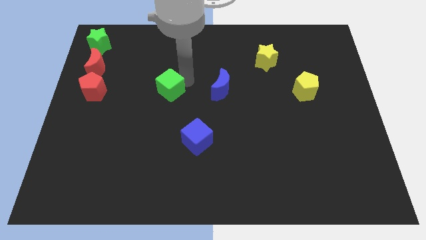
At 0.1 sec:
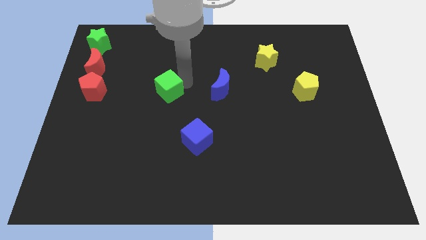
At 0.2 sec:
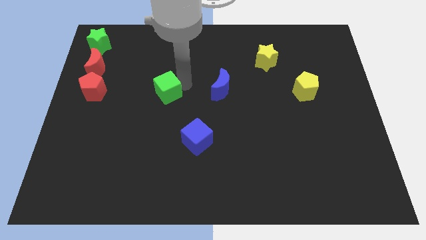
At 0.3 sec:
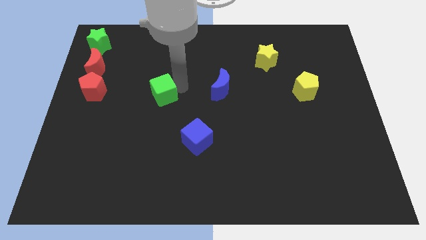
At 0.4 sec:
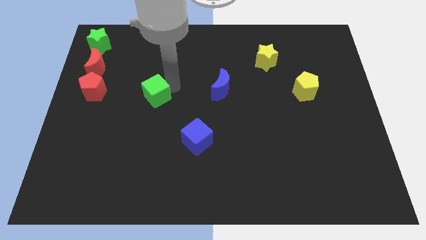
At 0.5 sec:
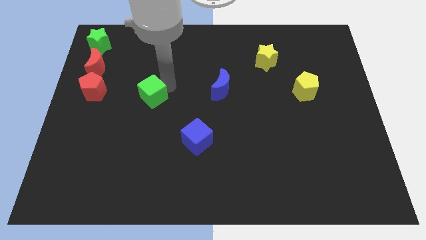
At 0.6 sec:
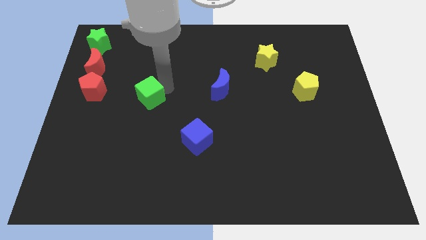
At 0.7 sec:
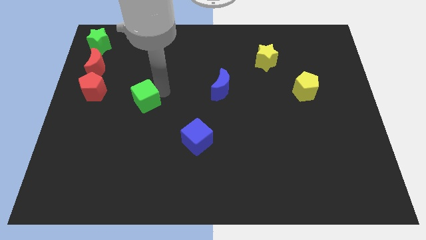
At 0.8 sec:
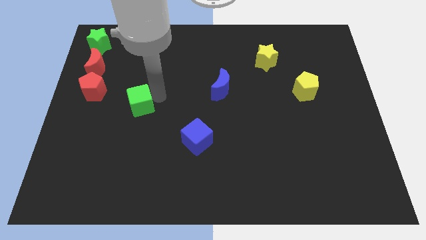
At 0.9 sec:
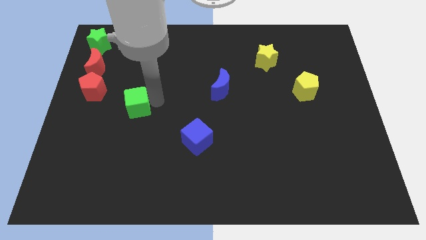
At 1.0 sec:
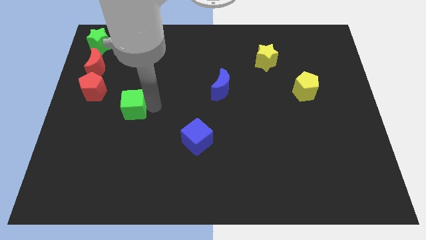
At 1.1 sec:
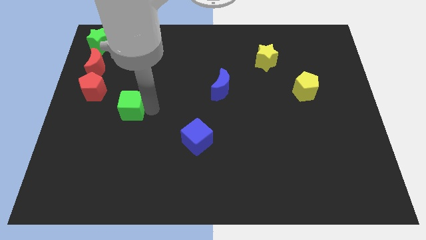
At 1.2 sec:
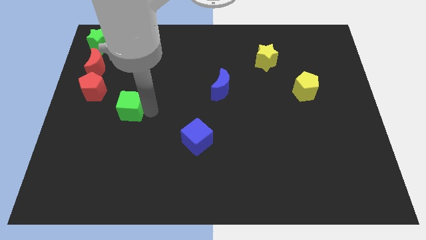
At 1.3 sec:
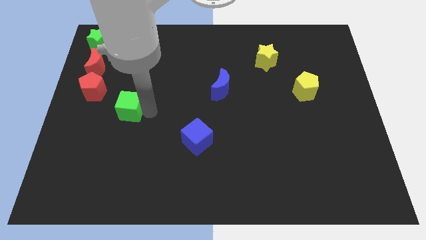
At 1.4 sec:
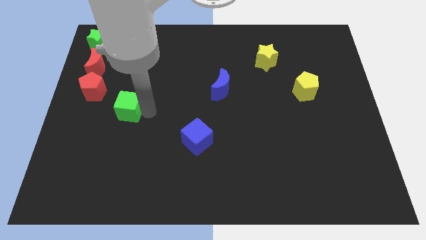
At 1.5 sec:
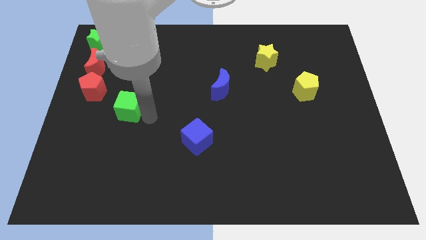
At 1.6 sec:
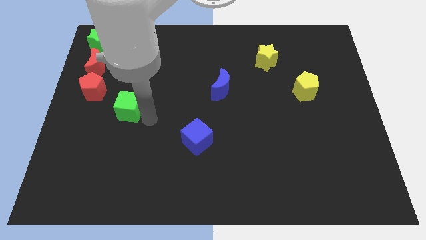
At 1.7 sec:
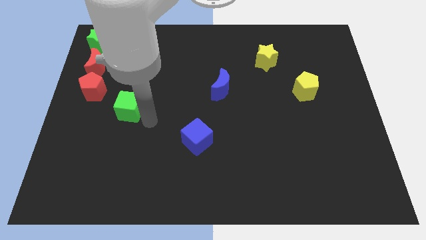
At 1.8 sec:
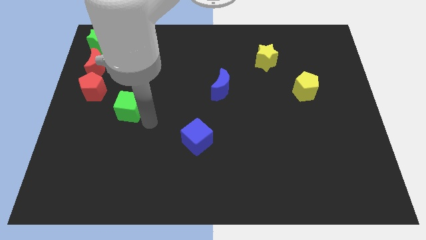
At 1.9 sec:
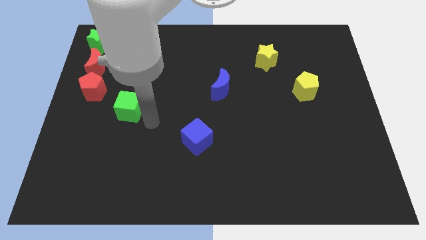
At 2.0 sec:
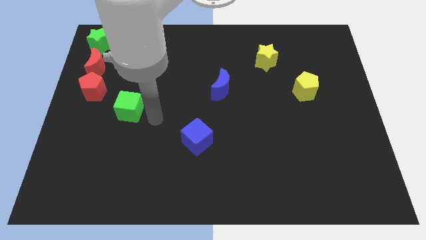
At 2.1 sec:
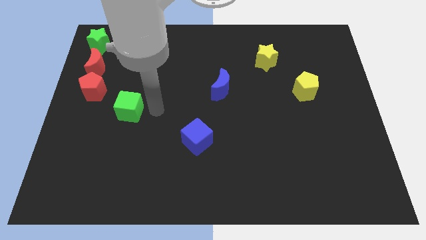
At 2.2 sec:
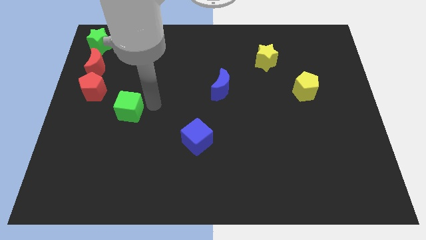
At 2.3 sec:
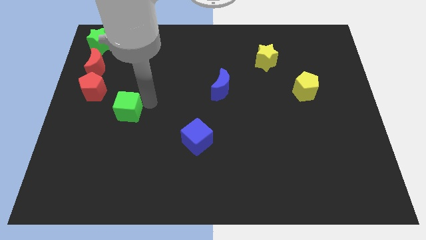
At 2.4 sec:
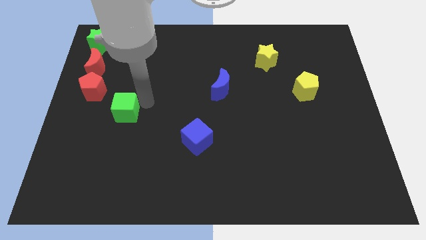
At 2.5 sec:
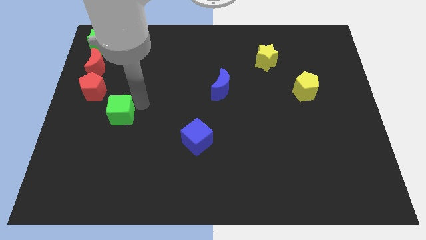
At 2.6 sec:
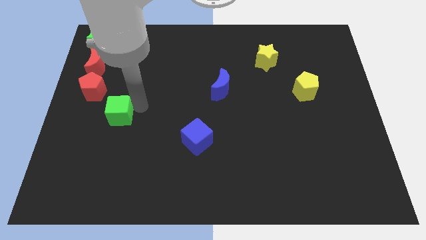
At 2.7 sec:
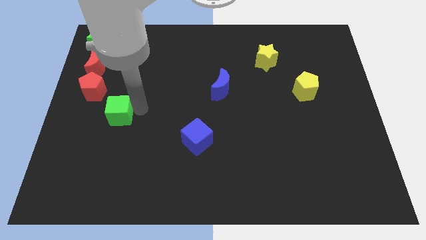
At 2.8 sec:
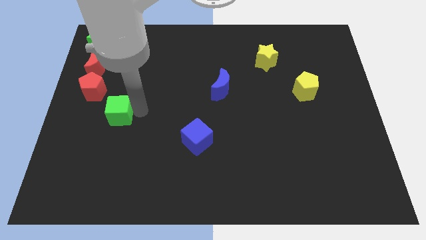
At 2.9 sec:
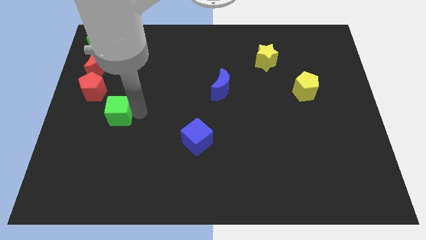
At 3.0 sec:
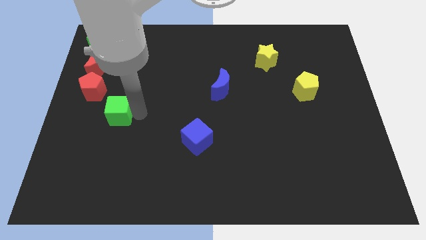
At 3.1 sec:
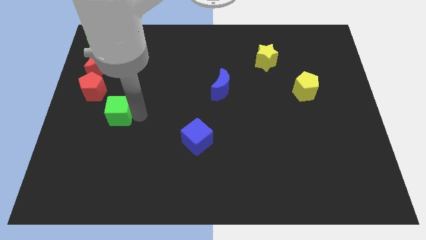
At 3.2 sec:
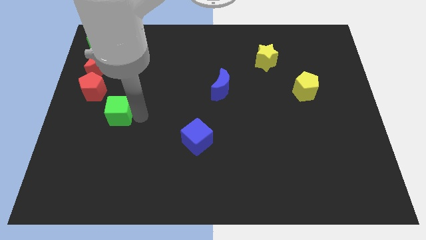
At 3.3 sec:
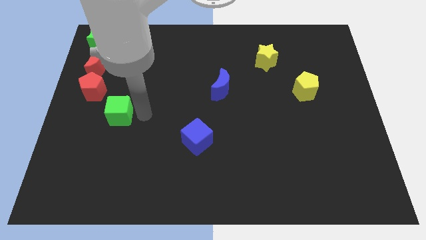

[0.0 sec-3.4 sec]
push green cube towards left side

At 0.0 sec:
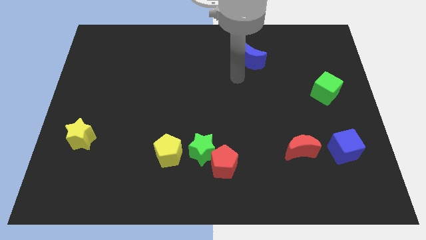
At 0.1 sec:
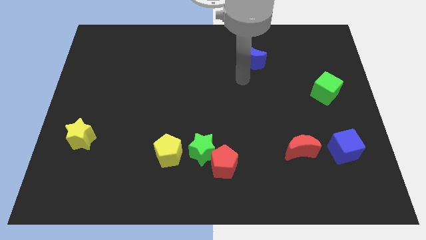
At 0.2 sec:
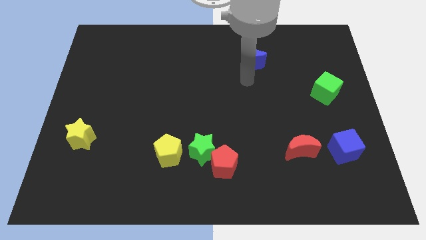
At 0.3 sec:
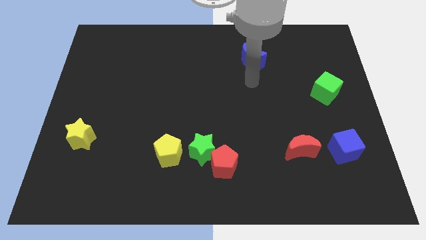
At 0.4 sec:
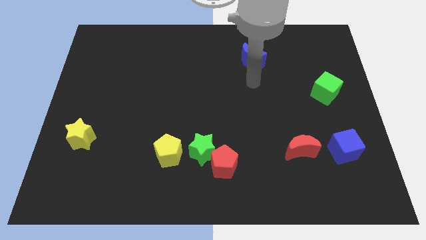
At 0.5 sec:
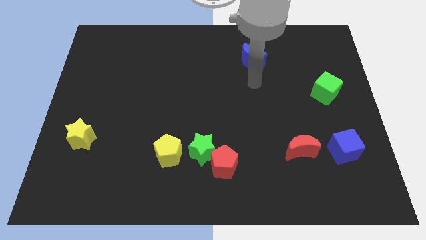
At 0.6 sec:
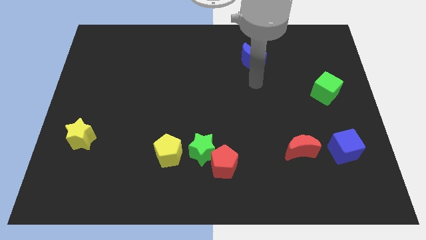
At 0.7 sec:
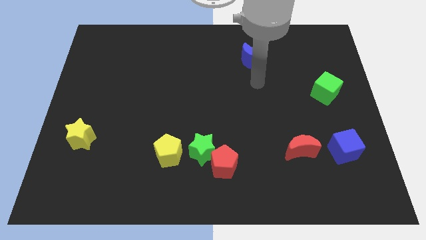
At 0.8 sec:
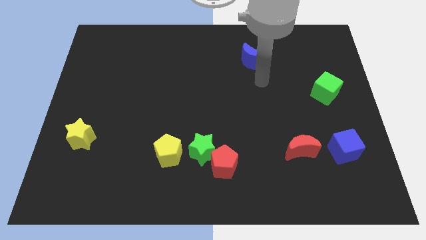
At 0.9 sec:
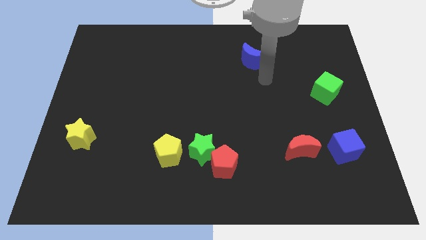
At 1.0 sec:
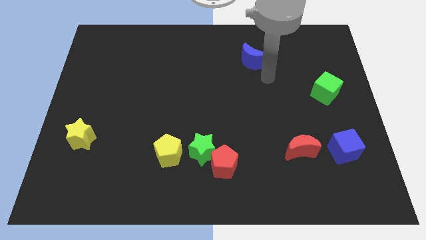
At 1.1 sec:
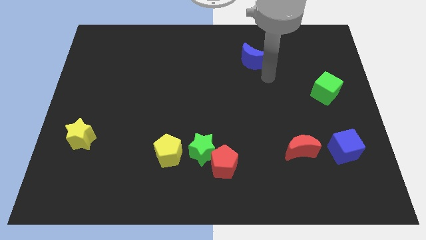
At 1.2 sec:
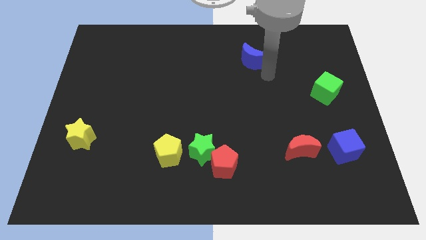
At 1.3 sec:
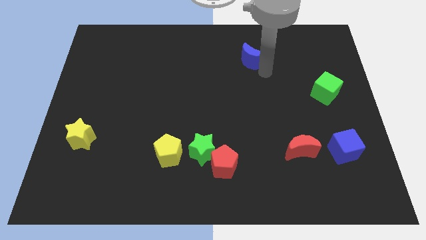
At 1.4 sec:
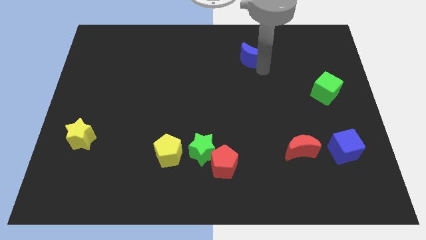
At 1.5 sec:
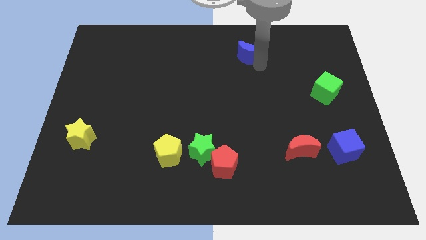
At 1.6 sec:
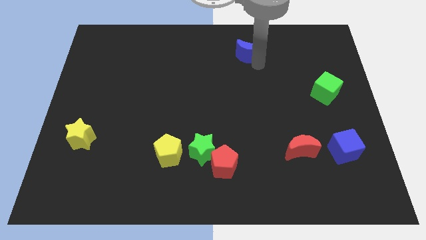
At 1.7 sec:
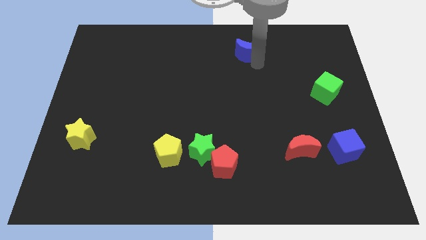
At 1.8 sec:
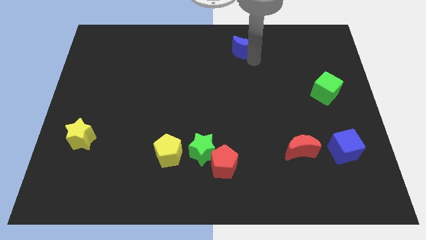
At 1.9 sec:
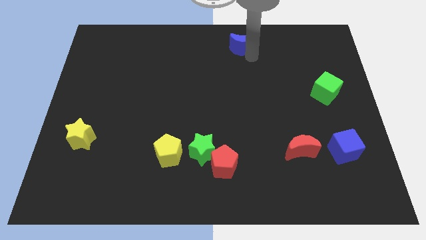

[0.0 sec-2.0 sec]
push the blue moon towards the center

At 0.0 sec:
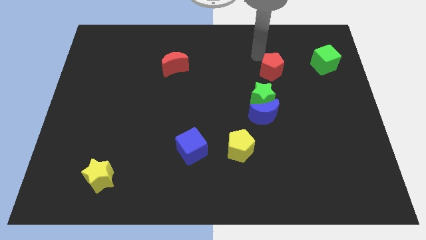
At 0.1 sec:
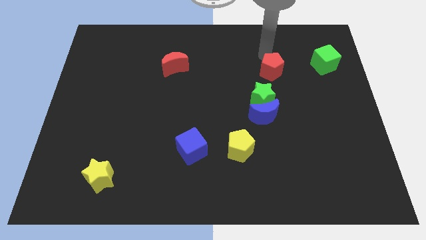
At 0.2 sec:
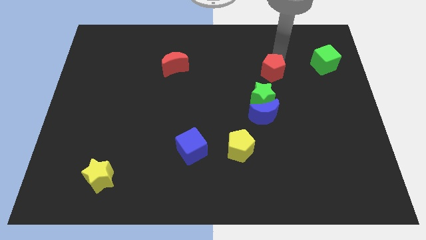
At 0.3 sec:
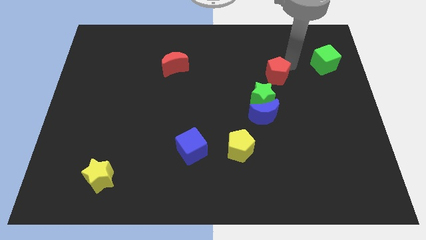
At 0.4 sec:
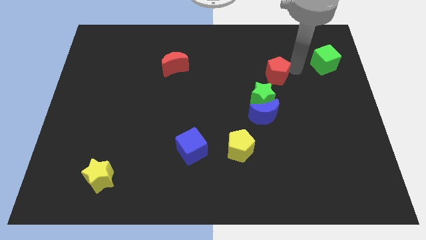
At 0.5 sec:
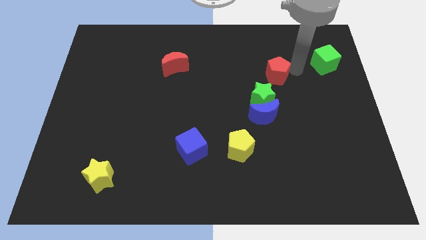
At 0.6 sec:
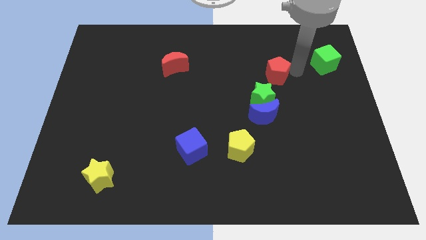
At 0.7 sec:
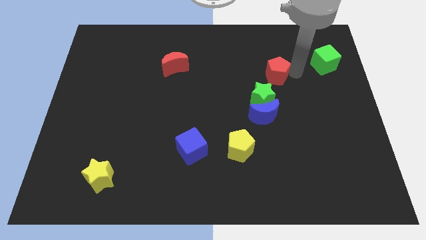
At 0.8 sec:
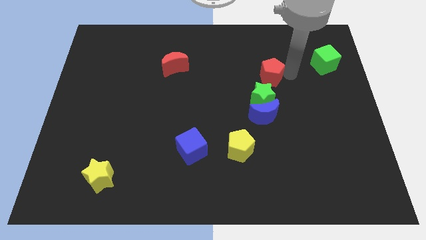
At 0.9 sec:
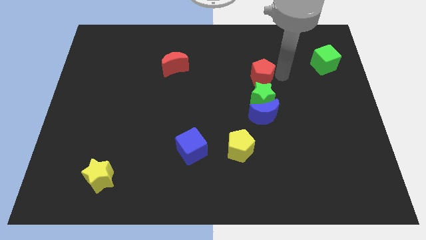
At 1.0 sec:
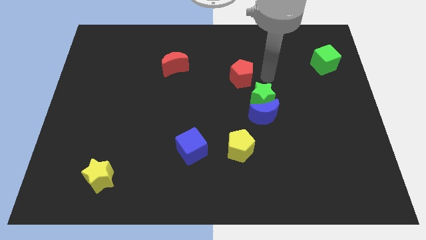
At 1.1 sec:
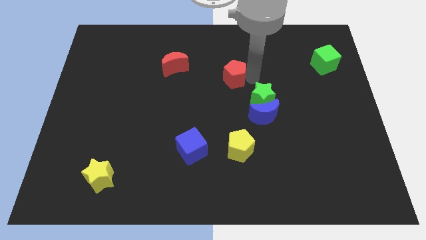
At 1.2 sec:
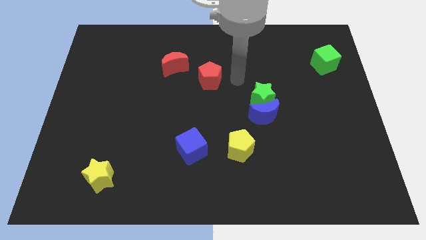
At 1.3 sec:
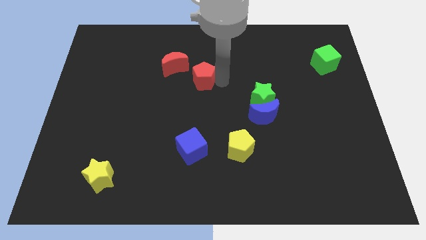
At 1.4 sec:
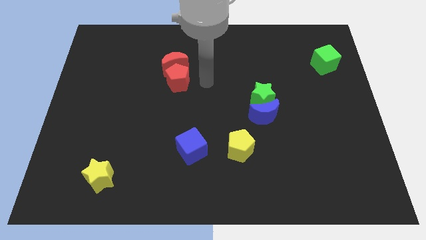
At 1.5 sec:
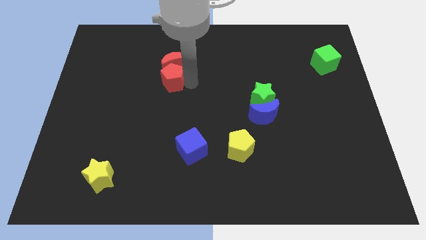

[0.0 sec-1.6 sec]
place the red pentagon below the red moon

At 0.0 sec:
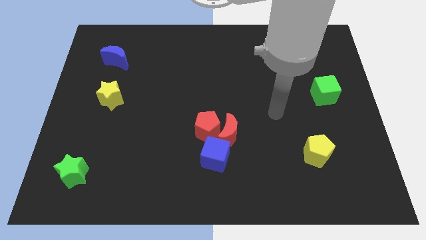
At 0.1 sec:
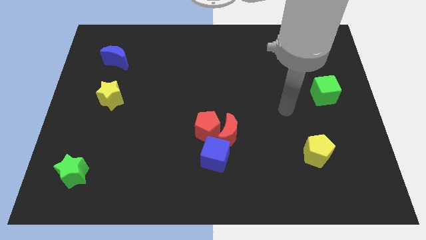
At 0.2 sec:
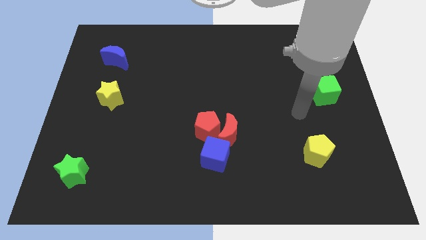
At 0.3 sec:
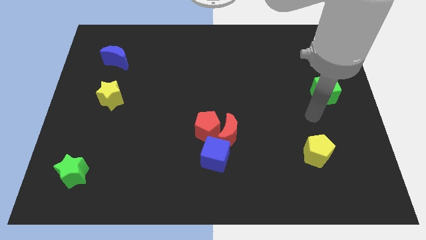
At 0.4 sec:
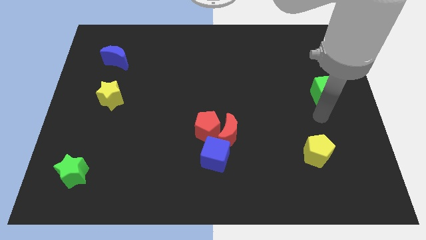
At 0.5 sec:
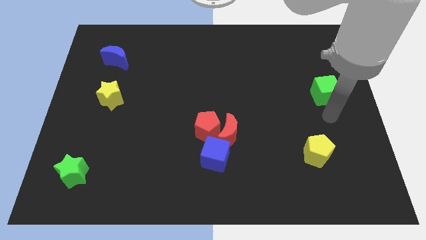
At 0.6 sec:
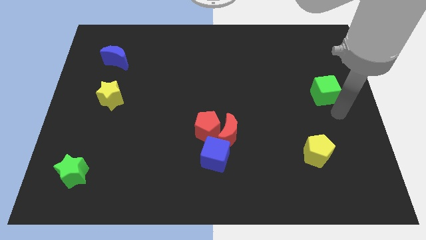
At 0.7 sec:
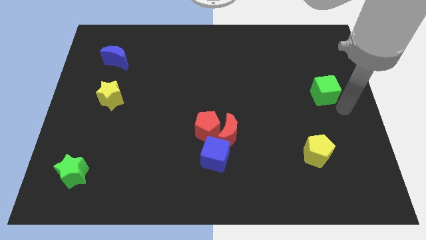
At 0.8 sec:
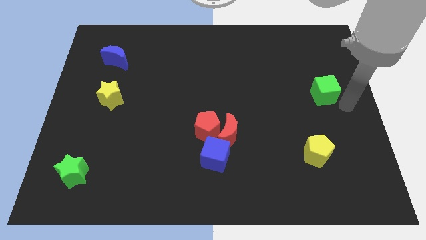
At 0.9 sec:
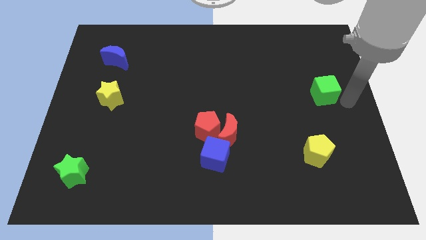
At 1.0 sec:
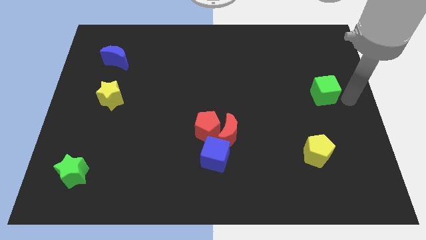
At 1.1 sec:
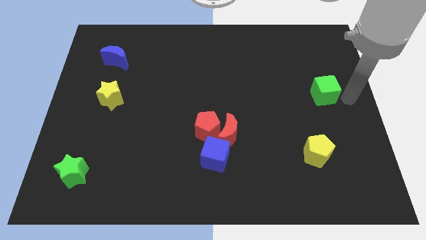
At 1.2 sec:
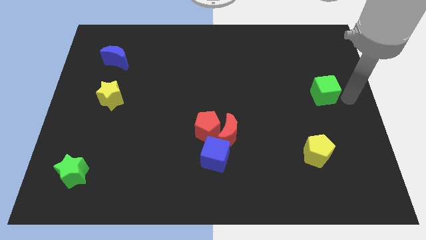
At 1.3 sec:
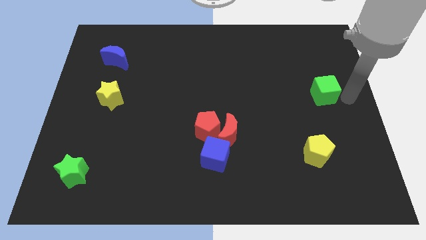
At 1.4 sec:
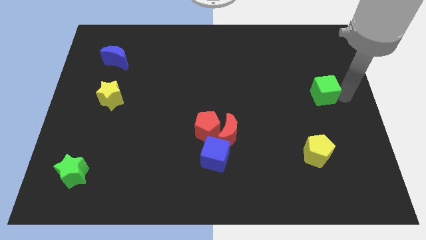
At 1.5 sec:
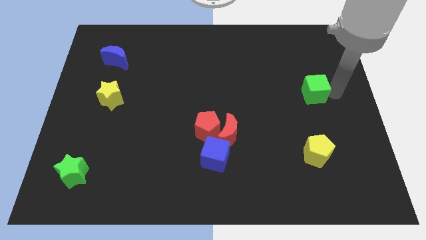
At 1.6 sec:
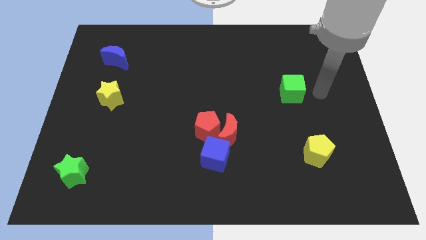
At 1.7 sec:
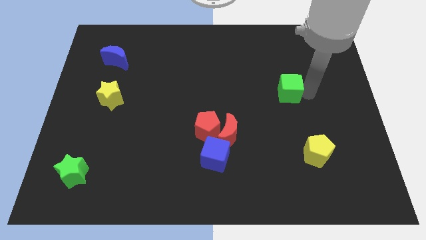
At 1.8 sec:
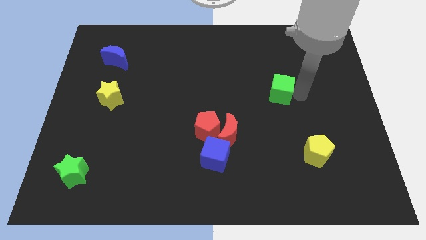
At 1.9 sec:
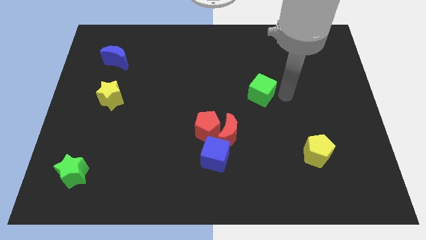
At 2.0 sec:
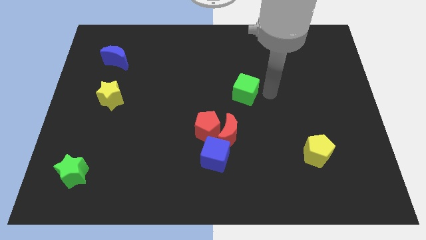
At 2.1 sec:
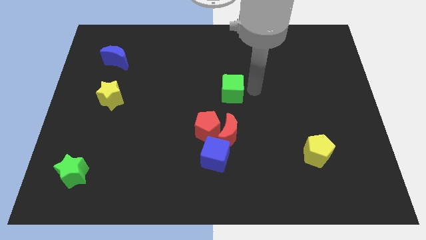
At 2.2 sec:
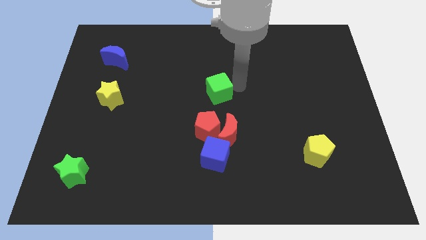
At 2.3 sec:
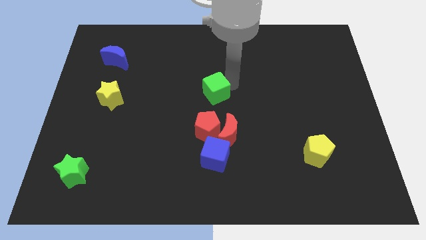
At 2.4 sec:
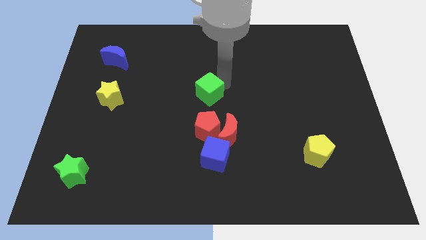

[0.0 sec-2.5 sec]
place the green cube at the center of the board
